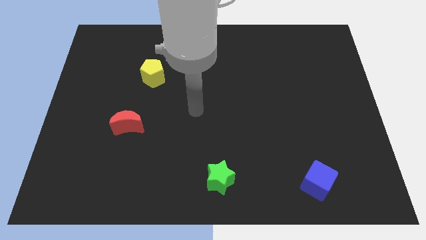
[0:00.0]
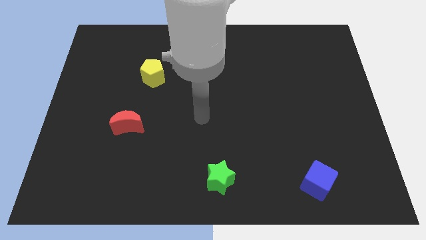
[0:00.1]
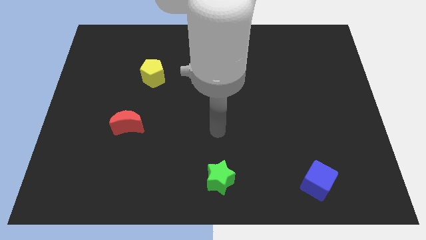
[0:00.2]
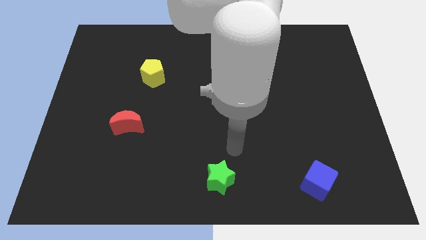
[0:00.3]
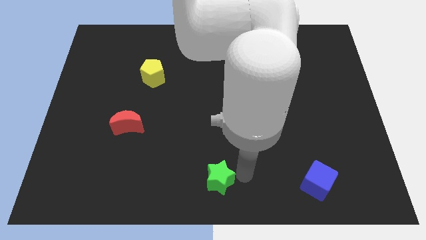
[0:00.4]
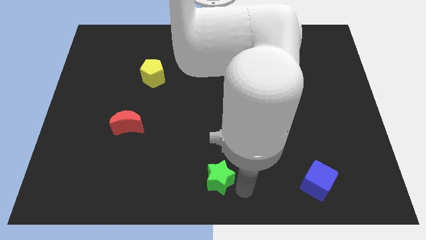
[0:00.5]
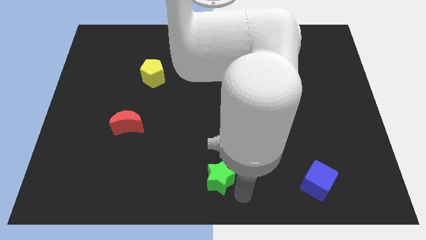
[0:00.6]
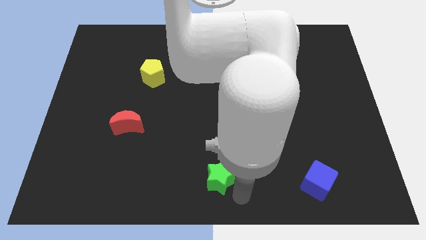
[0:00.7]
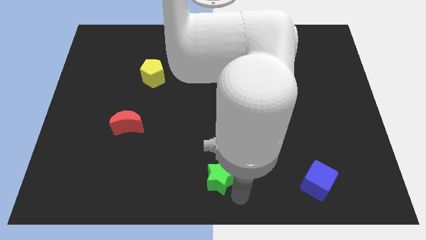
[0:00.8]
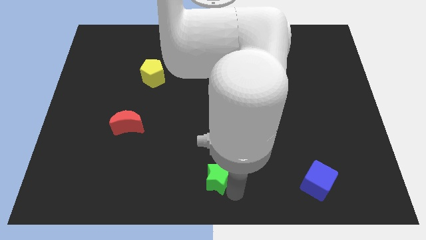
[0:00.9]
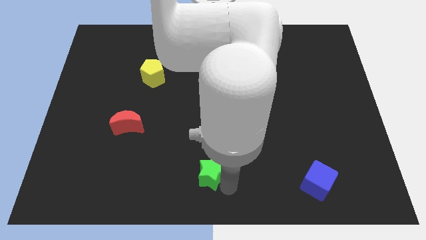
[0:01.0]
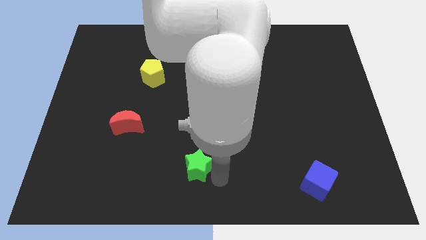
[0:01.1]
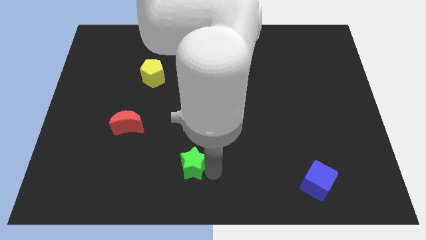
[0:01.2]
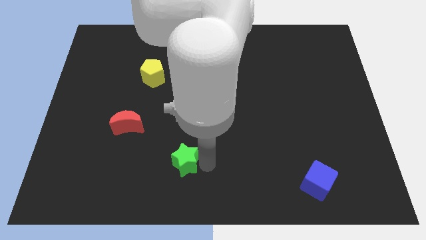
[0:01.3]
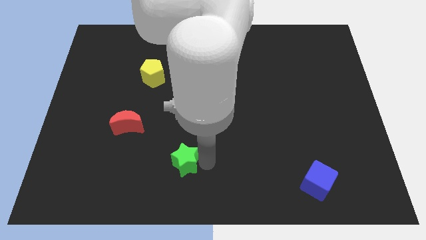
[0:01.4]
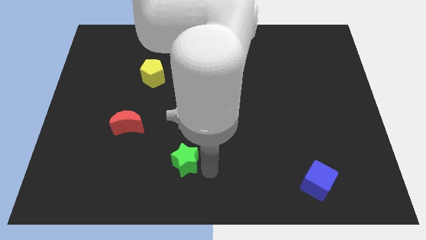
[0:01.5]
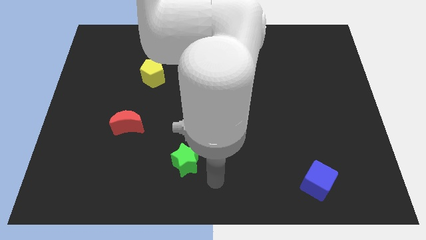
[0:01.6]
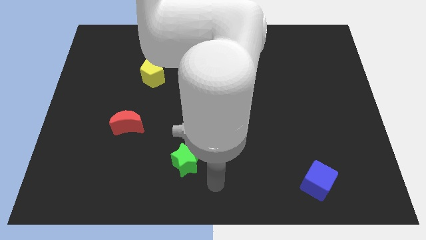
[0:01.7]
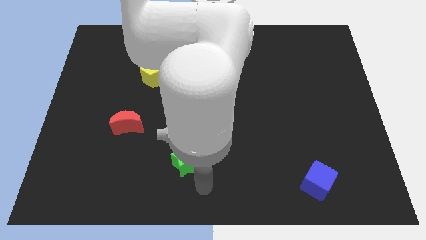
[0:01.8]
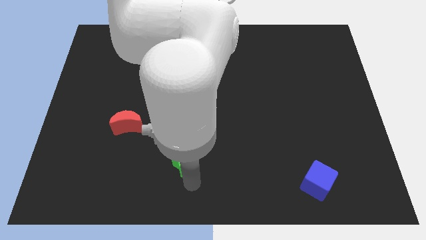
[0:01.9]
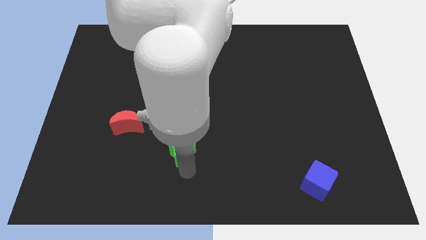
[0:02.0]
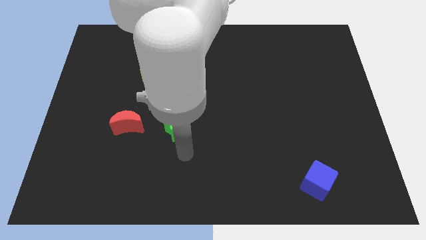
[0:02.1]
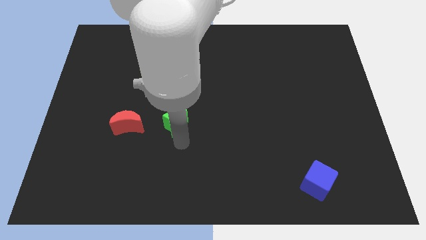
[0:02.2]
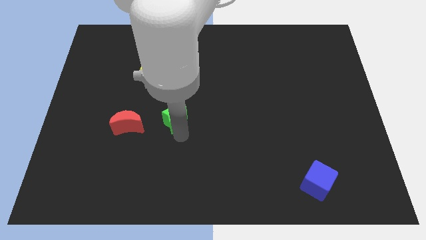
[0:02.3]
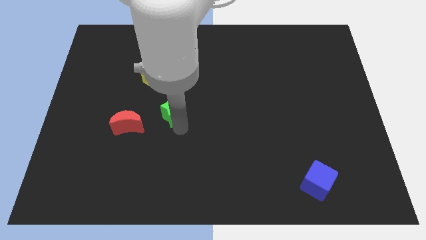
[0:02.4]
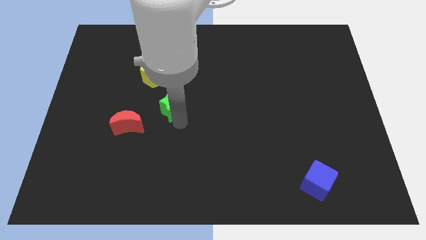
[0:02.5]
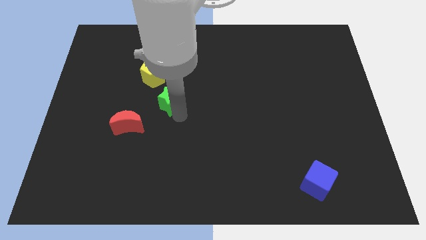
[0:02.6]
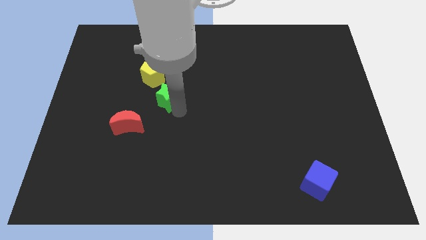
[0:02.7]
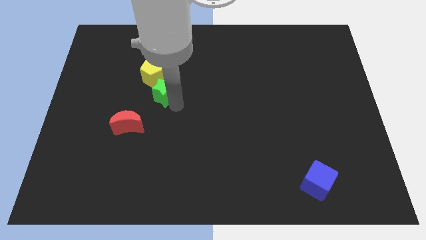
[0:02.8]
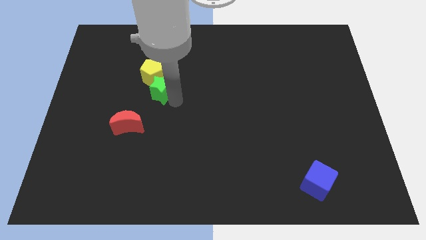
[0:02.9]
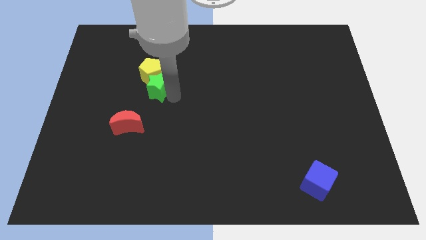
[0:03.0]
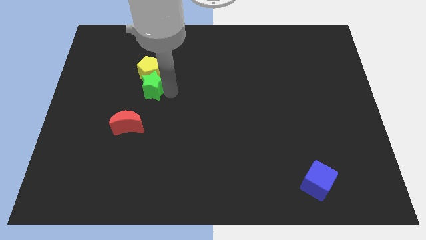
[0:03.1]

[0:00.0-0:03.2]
slide the green star towards the yellow block

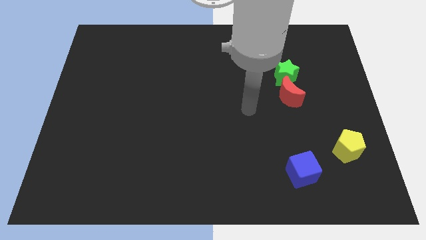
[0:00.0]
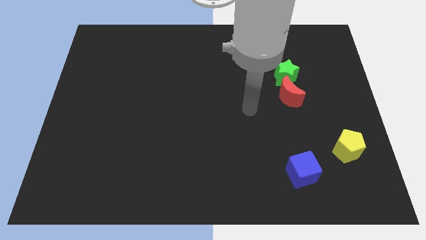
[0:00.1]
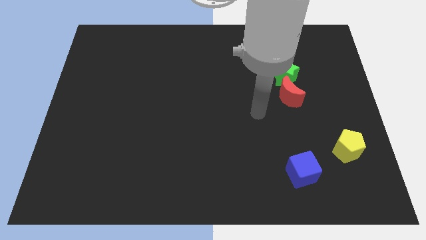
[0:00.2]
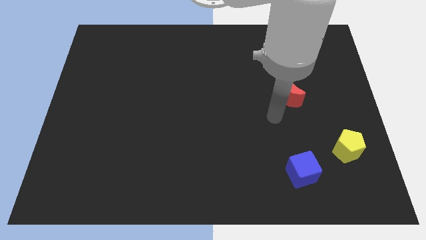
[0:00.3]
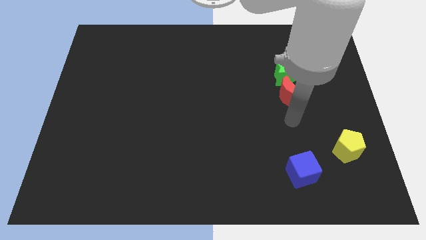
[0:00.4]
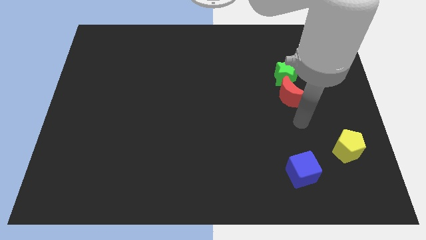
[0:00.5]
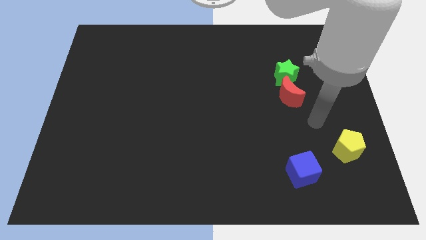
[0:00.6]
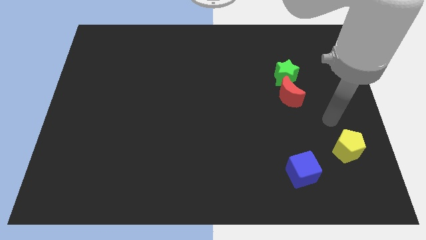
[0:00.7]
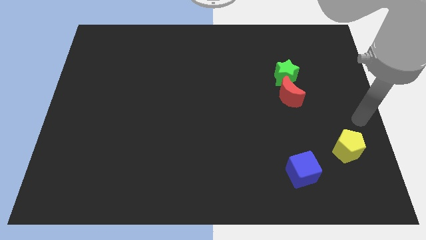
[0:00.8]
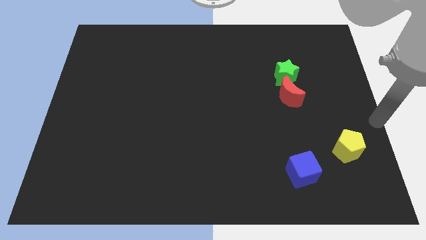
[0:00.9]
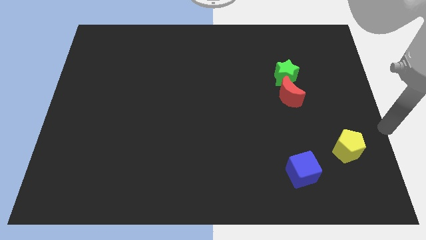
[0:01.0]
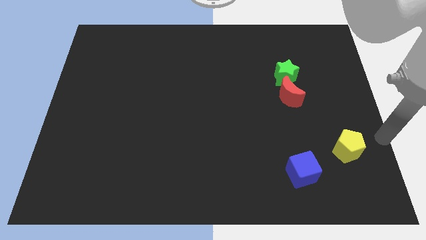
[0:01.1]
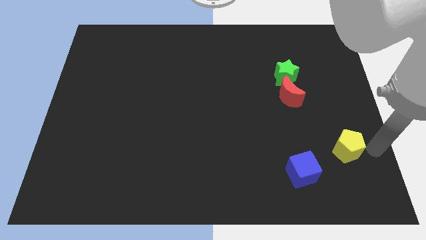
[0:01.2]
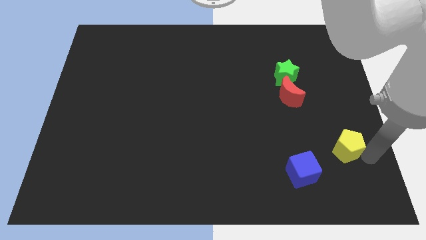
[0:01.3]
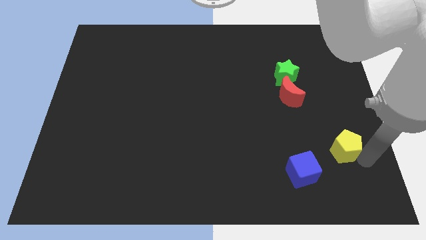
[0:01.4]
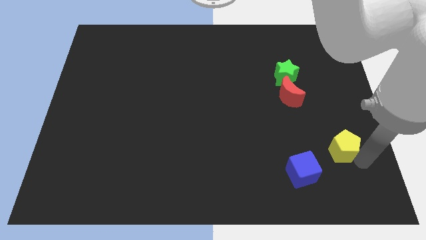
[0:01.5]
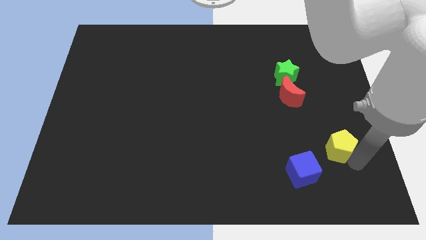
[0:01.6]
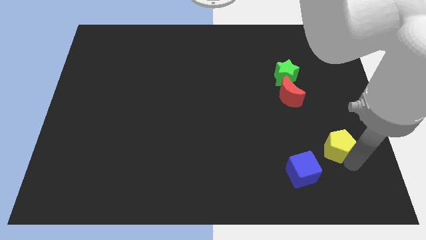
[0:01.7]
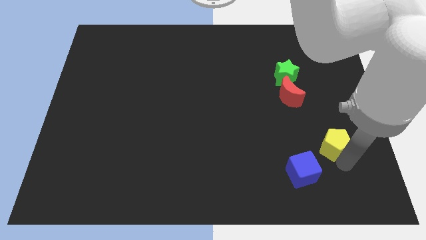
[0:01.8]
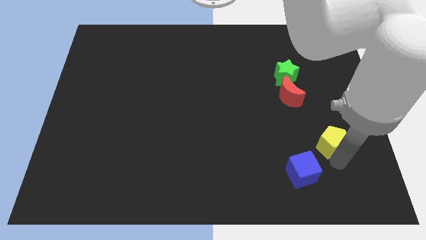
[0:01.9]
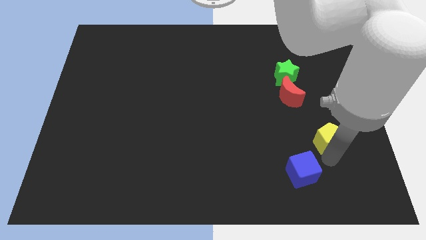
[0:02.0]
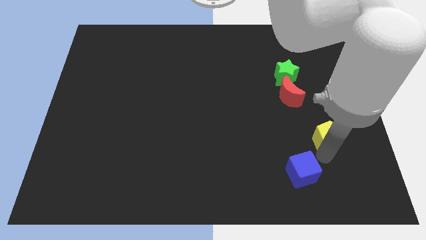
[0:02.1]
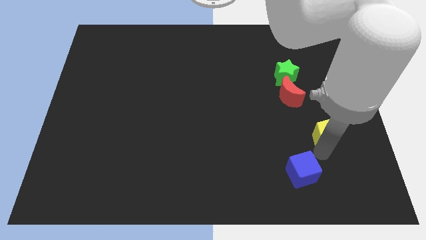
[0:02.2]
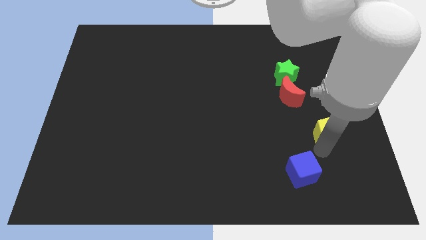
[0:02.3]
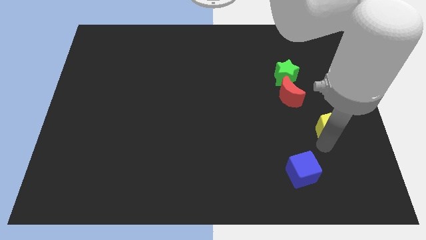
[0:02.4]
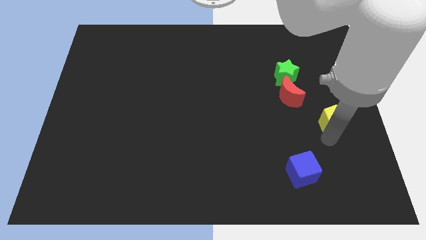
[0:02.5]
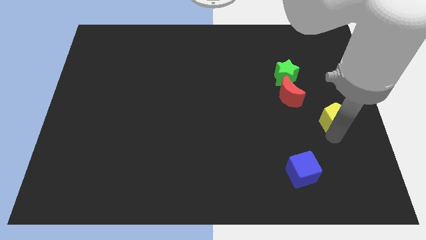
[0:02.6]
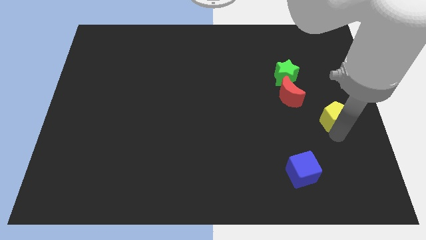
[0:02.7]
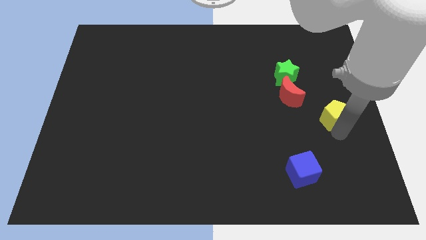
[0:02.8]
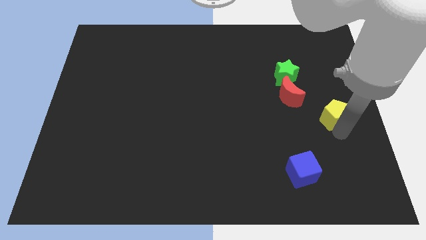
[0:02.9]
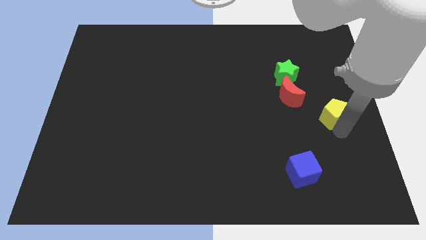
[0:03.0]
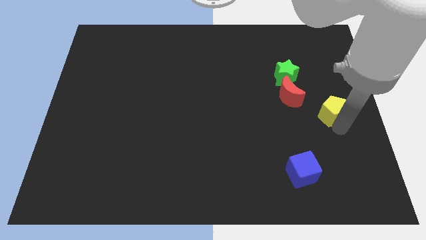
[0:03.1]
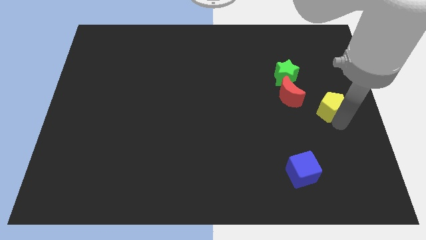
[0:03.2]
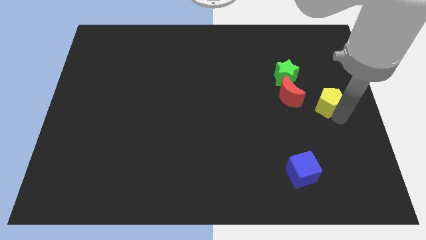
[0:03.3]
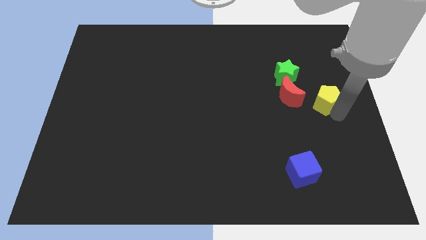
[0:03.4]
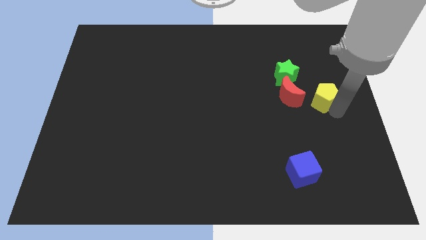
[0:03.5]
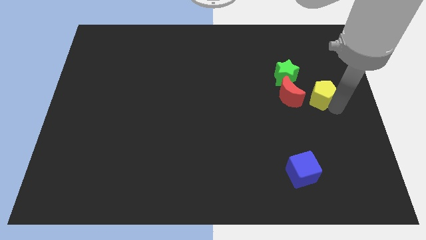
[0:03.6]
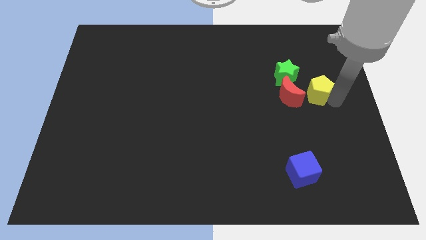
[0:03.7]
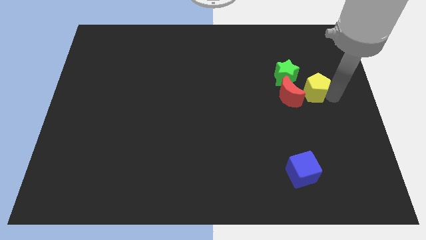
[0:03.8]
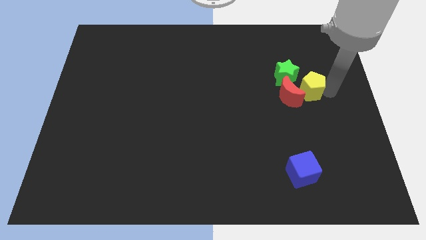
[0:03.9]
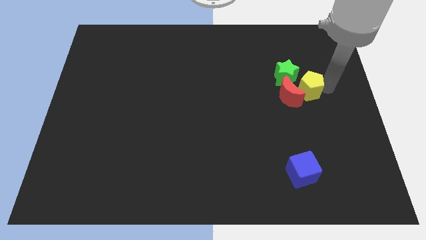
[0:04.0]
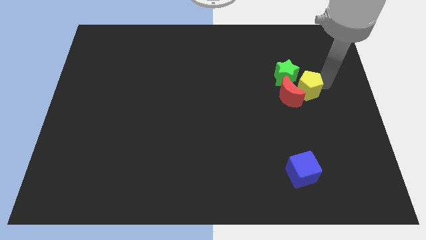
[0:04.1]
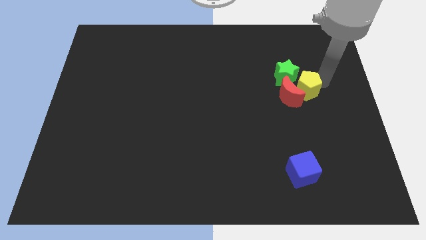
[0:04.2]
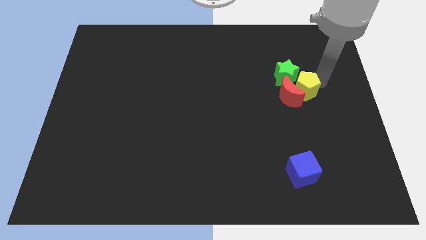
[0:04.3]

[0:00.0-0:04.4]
slide the pentagon close to the green block

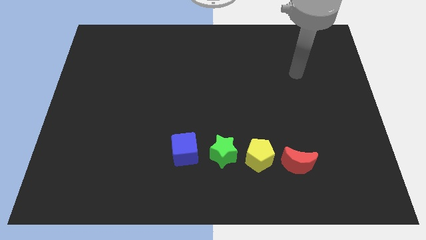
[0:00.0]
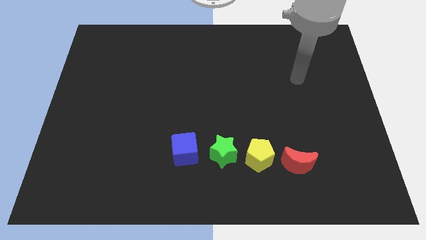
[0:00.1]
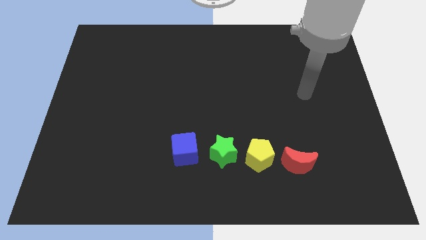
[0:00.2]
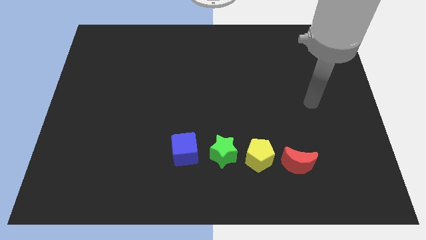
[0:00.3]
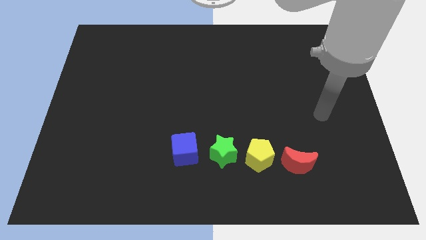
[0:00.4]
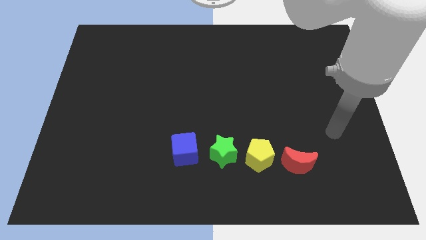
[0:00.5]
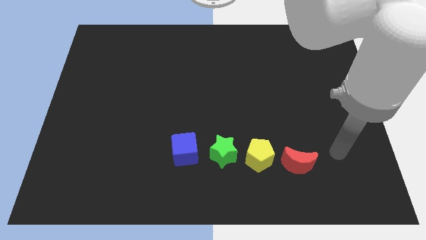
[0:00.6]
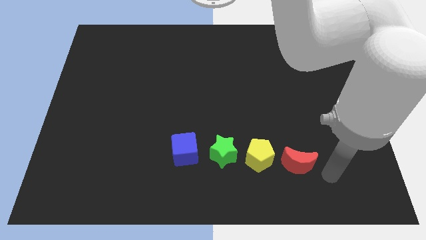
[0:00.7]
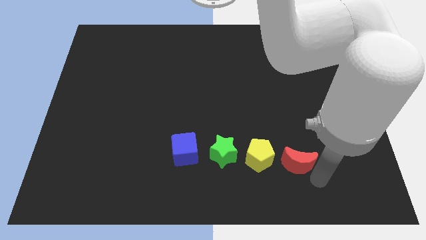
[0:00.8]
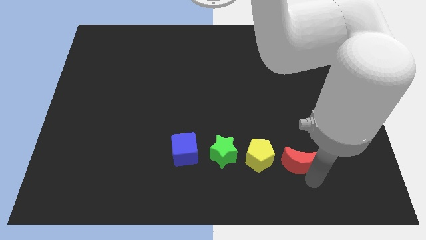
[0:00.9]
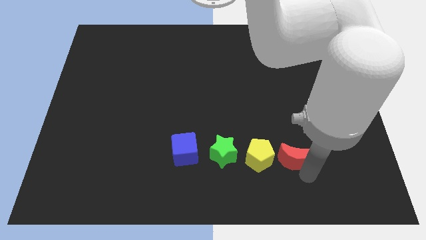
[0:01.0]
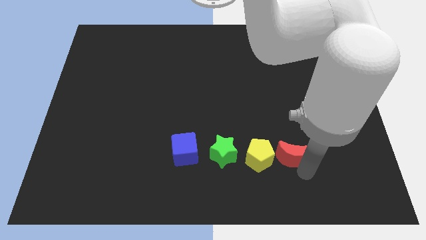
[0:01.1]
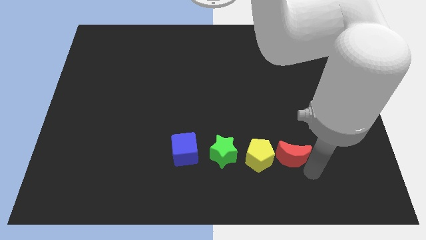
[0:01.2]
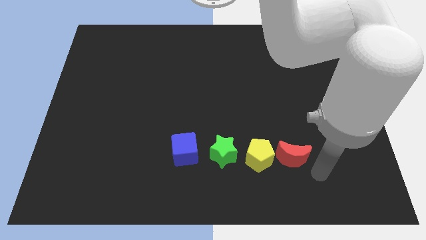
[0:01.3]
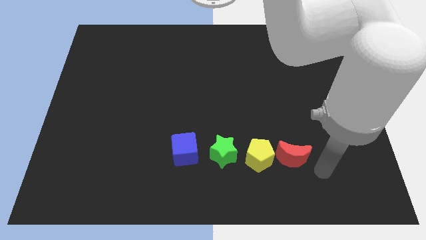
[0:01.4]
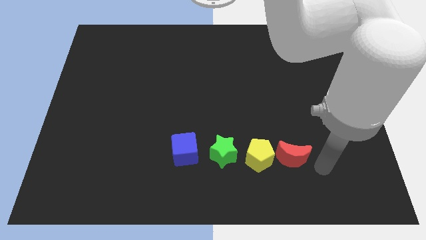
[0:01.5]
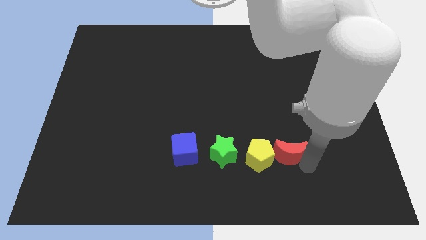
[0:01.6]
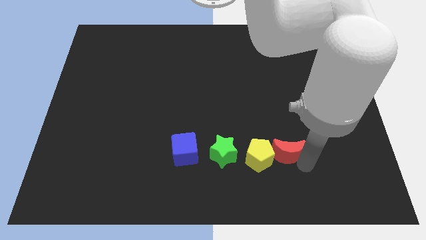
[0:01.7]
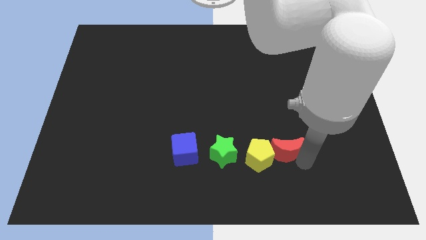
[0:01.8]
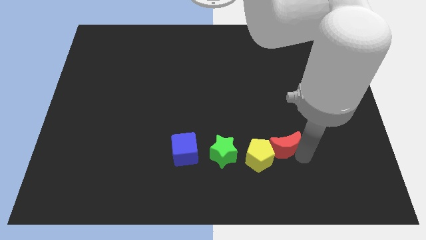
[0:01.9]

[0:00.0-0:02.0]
slide the moon towards the yellow block
